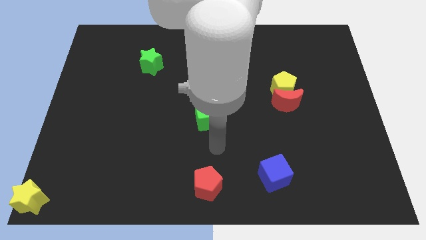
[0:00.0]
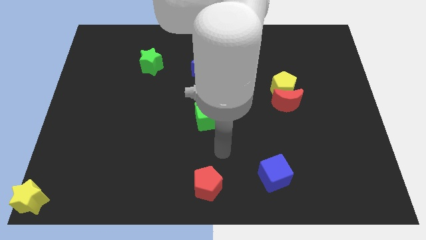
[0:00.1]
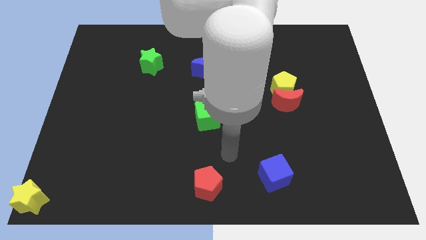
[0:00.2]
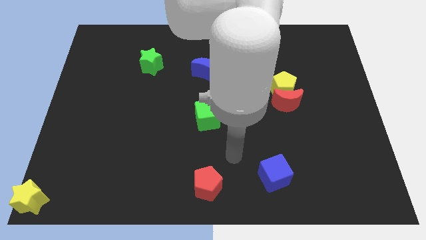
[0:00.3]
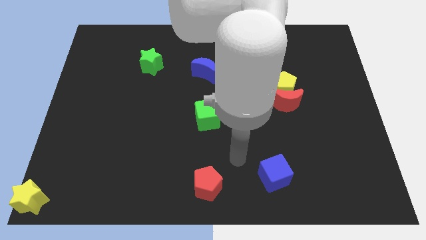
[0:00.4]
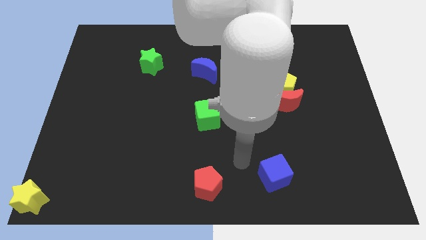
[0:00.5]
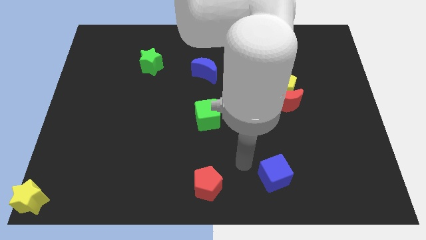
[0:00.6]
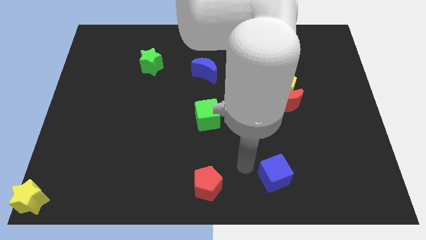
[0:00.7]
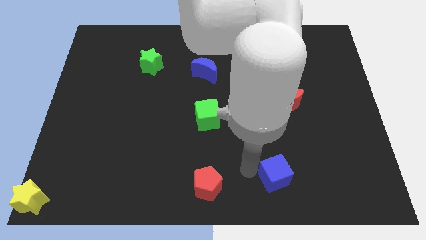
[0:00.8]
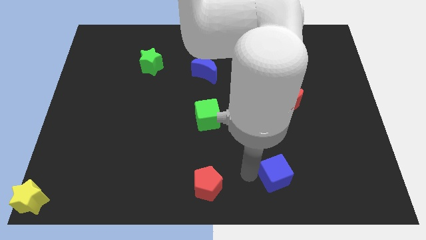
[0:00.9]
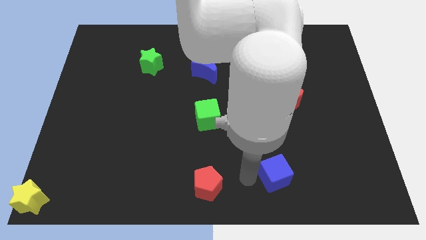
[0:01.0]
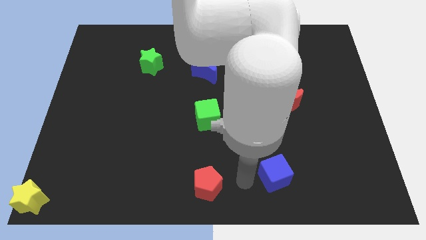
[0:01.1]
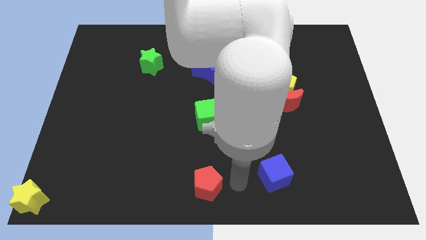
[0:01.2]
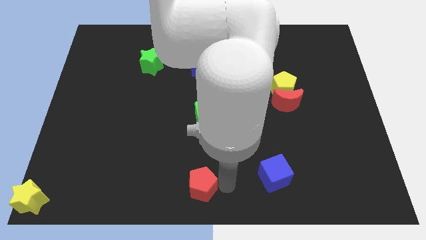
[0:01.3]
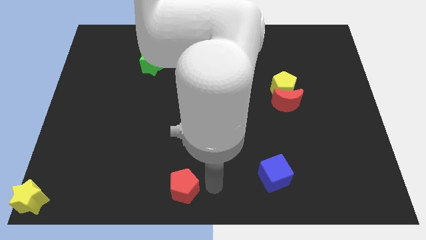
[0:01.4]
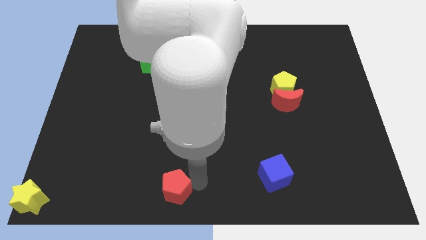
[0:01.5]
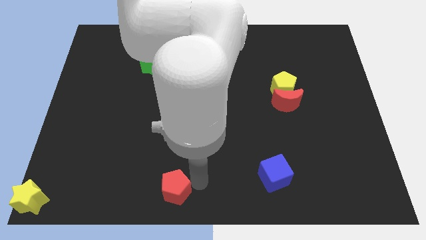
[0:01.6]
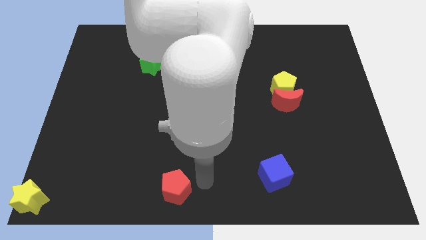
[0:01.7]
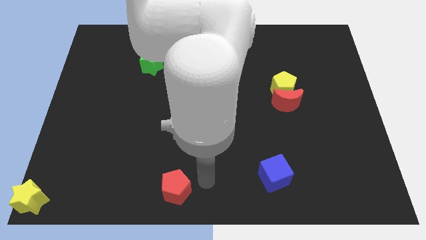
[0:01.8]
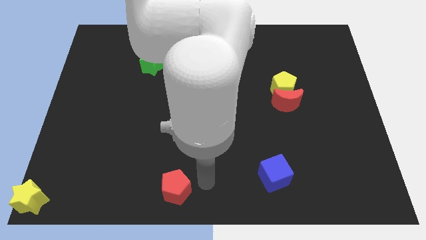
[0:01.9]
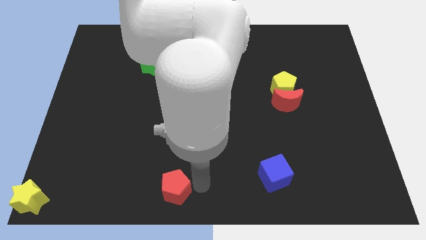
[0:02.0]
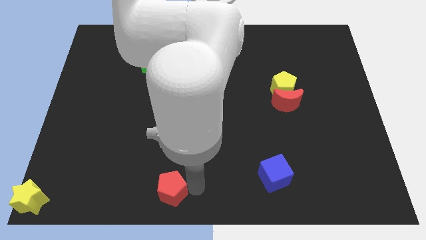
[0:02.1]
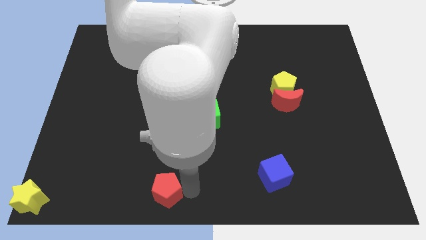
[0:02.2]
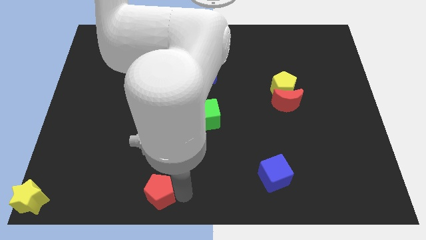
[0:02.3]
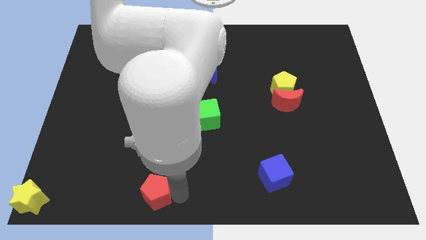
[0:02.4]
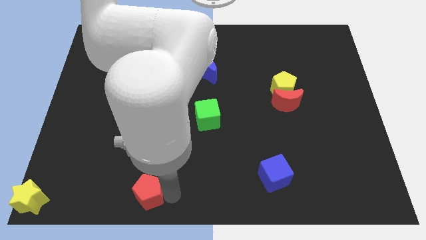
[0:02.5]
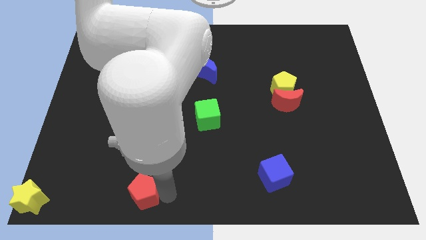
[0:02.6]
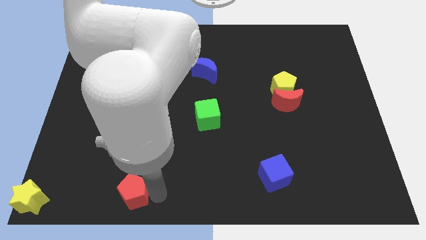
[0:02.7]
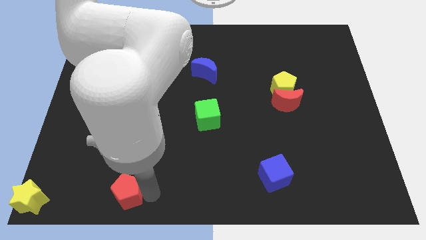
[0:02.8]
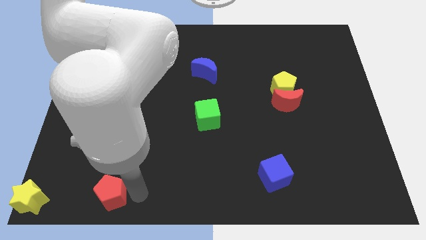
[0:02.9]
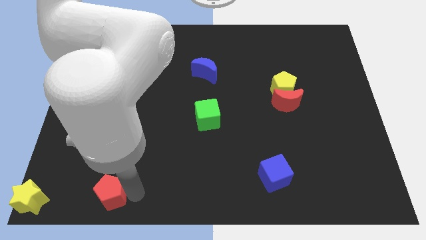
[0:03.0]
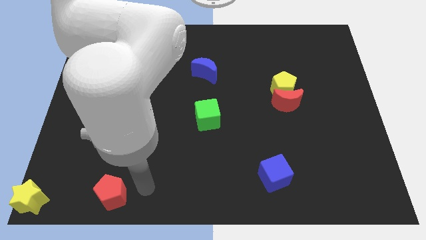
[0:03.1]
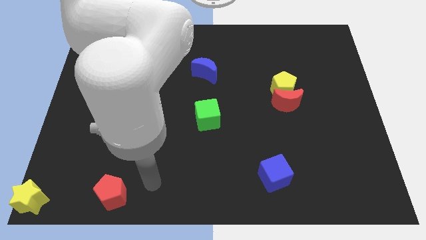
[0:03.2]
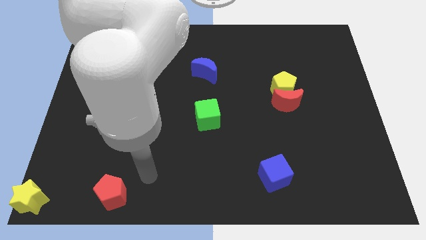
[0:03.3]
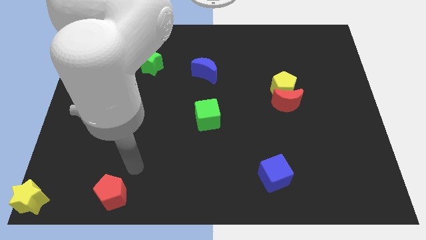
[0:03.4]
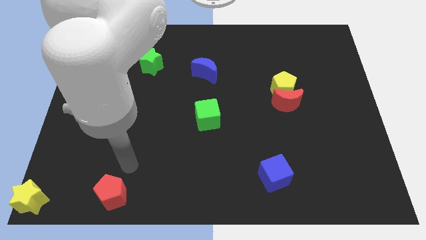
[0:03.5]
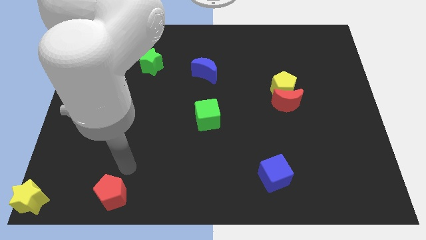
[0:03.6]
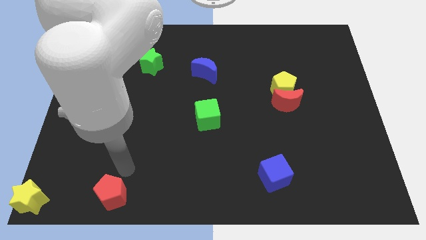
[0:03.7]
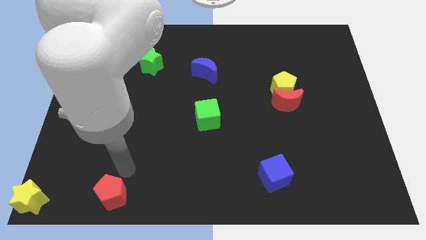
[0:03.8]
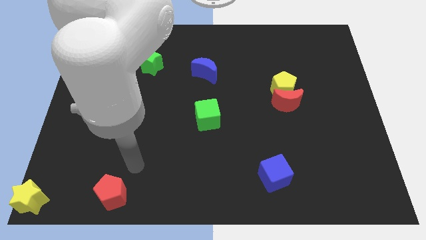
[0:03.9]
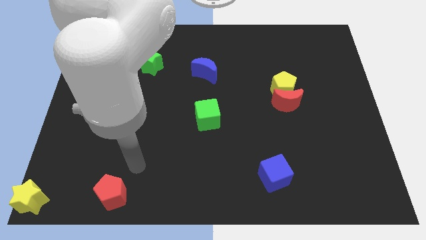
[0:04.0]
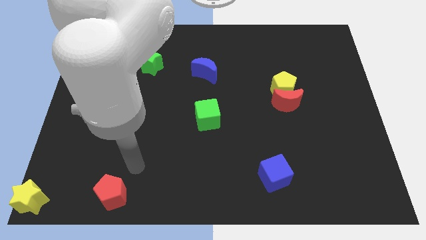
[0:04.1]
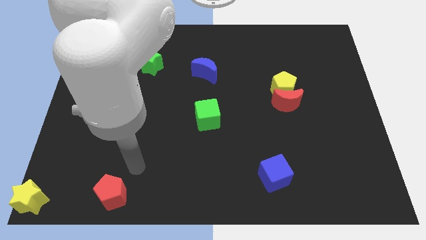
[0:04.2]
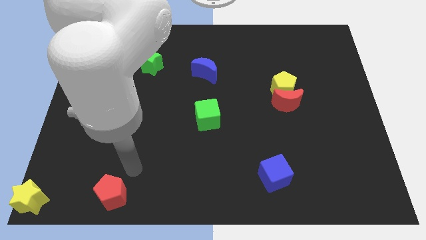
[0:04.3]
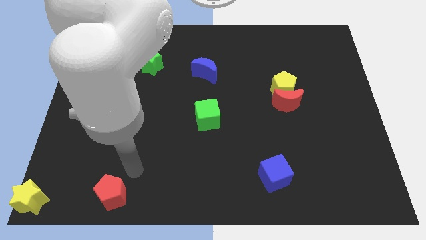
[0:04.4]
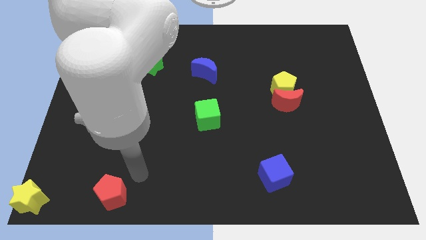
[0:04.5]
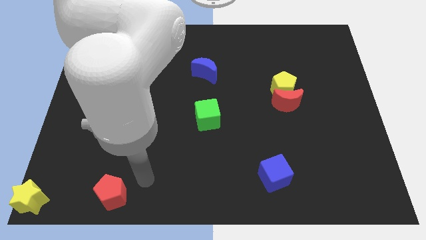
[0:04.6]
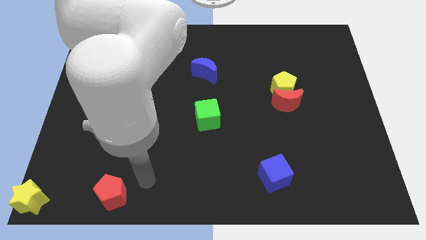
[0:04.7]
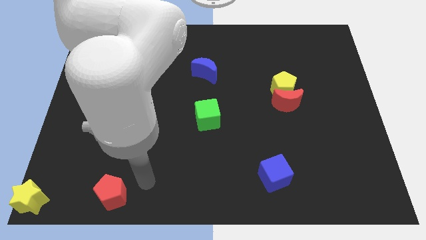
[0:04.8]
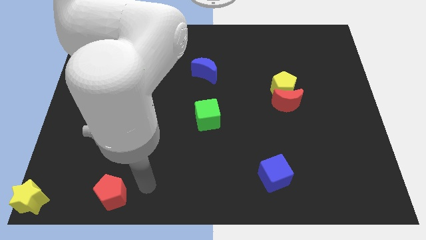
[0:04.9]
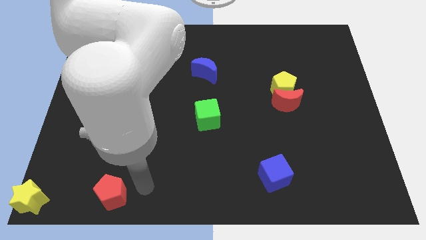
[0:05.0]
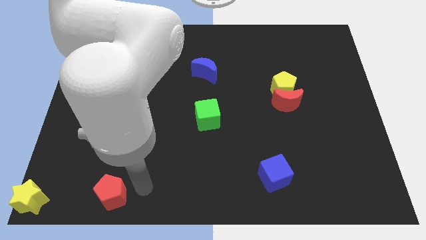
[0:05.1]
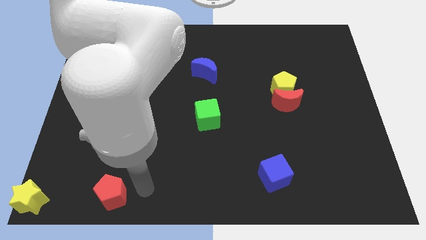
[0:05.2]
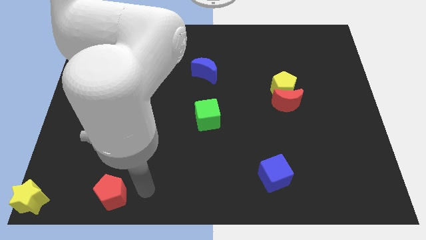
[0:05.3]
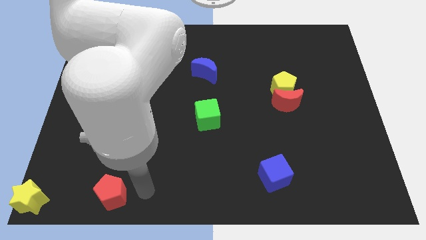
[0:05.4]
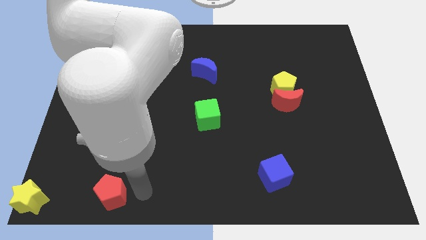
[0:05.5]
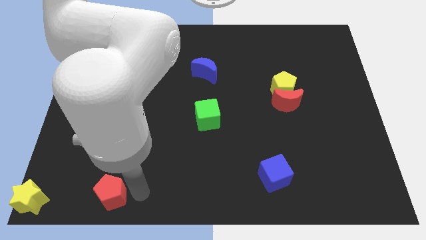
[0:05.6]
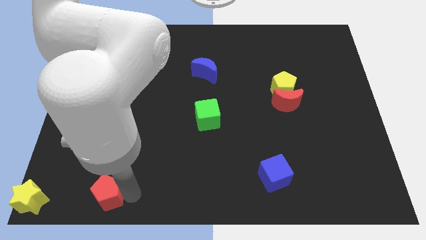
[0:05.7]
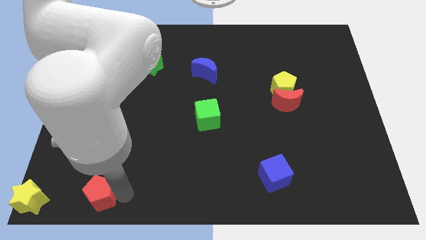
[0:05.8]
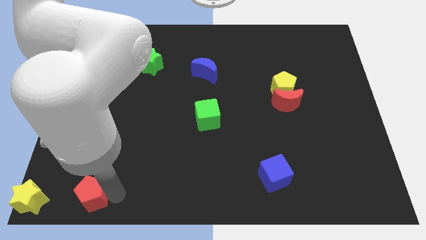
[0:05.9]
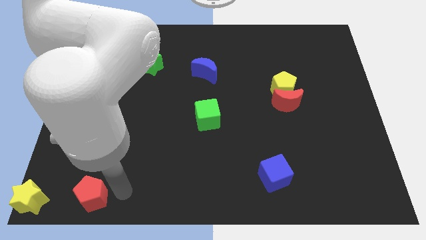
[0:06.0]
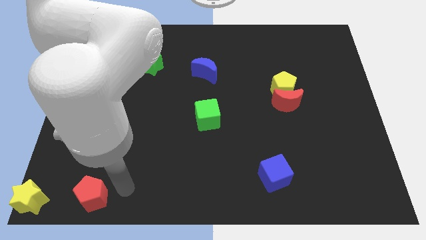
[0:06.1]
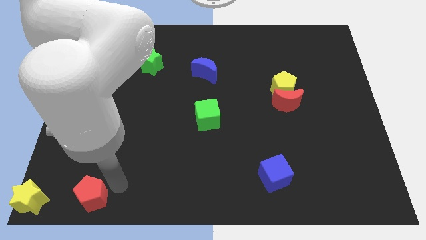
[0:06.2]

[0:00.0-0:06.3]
push the red pentagon to the right of the yellow star

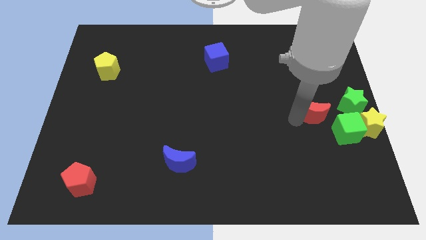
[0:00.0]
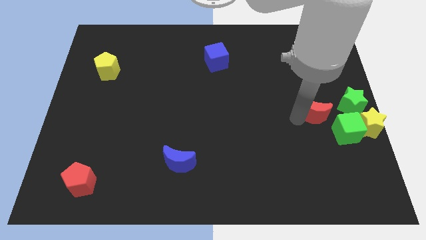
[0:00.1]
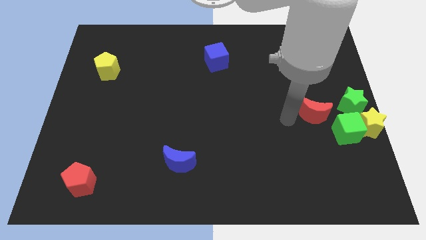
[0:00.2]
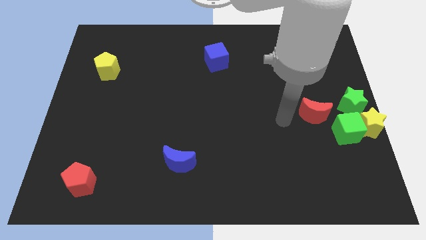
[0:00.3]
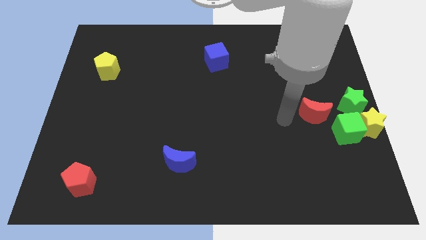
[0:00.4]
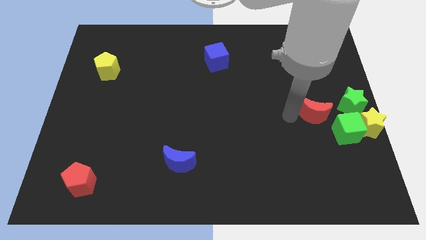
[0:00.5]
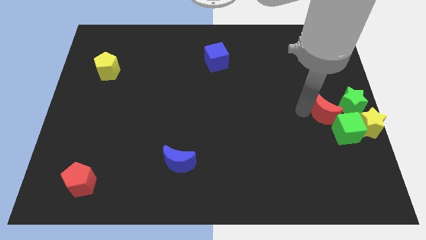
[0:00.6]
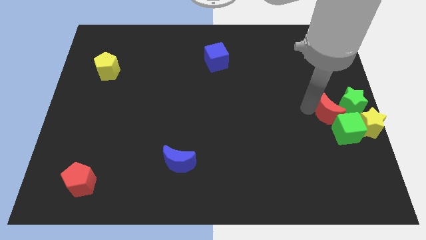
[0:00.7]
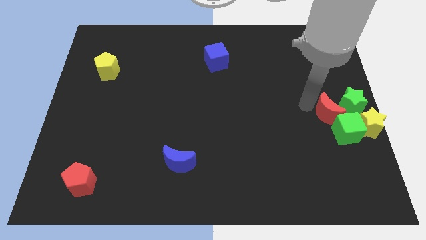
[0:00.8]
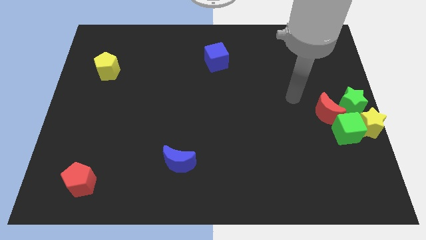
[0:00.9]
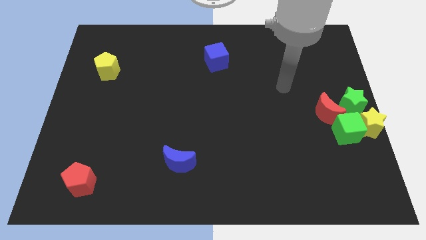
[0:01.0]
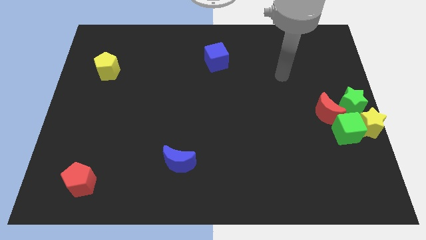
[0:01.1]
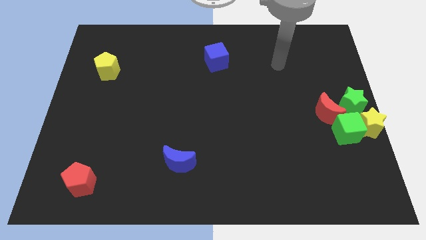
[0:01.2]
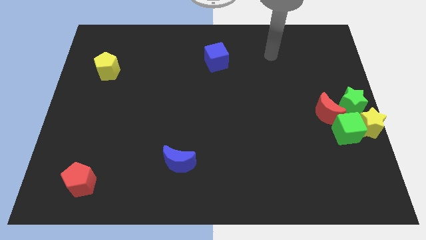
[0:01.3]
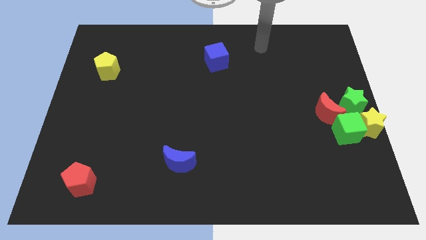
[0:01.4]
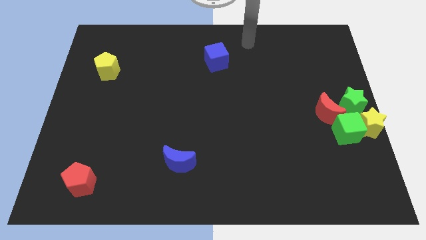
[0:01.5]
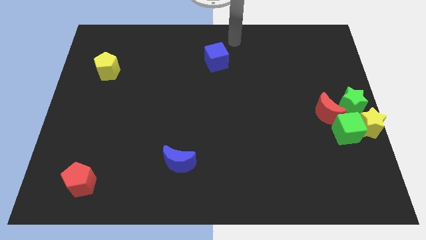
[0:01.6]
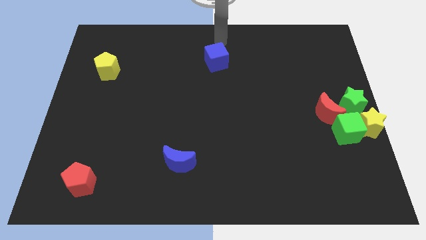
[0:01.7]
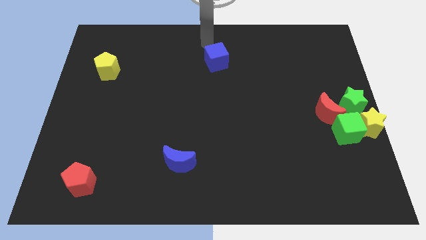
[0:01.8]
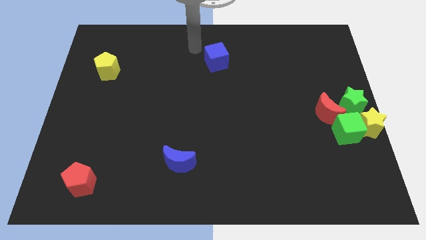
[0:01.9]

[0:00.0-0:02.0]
move the arm away from red crescent

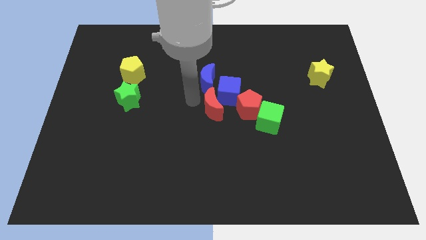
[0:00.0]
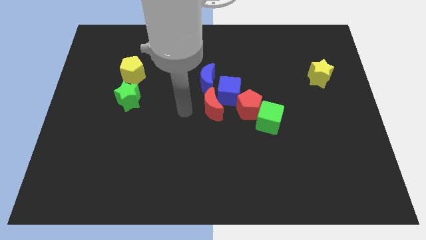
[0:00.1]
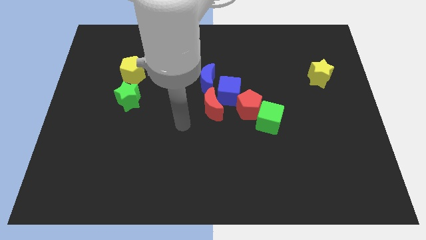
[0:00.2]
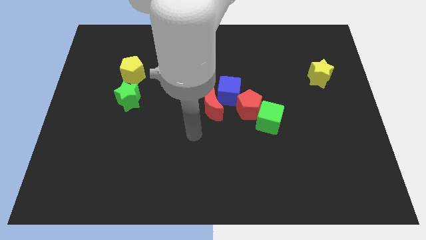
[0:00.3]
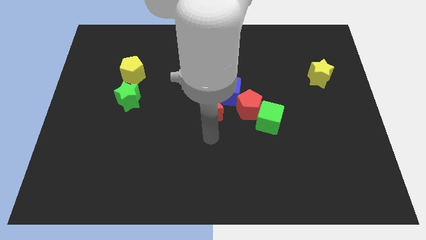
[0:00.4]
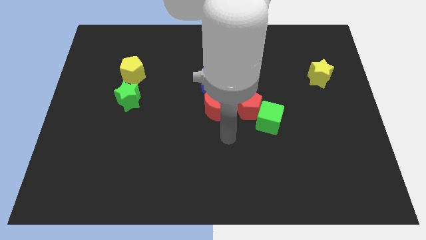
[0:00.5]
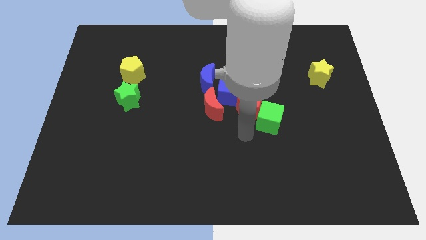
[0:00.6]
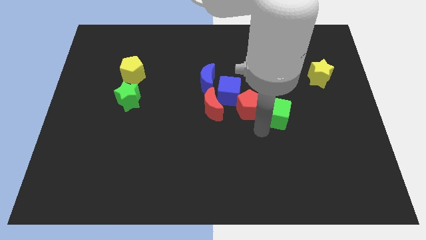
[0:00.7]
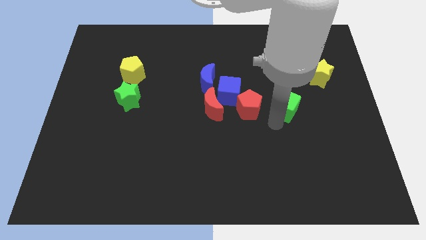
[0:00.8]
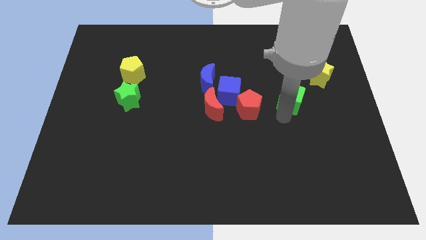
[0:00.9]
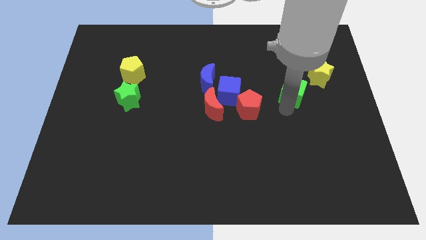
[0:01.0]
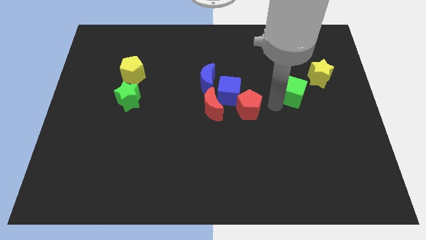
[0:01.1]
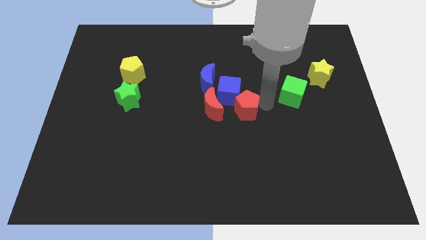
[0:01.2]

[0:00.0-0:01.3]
place the green cube to the right of the blue cube
